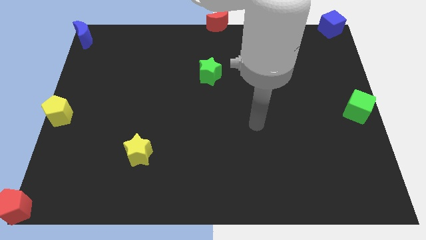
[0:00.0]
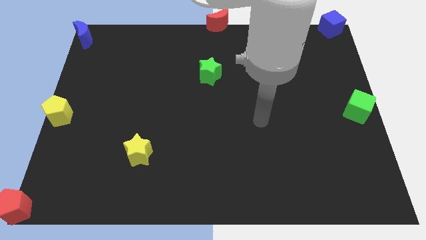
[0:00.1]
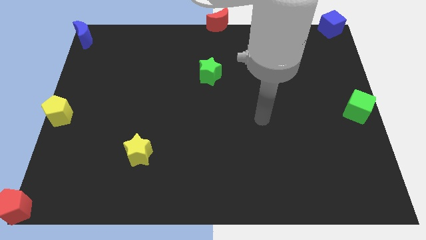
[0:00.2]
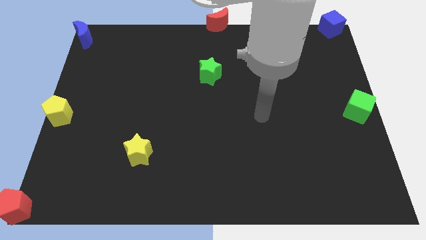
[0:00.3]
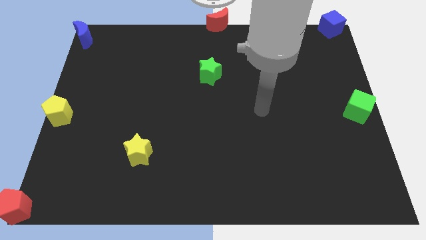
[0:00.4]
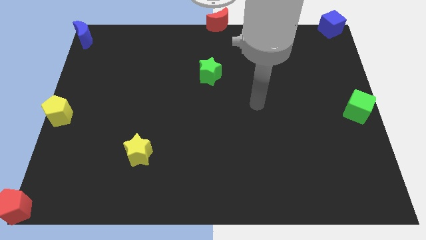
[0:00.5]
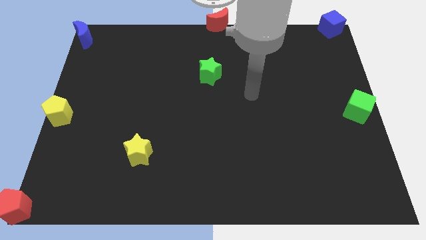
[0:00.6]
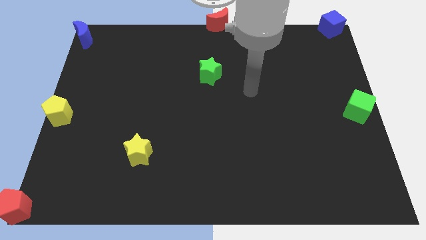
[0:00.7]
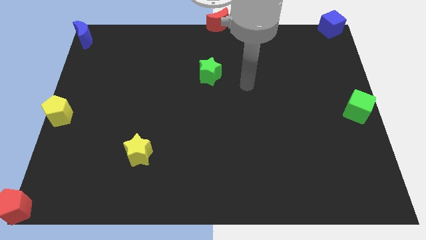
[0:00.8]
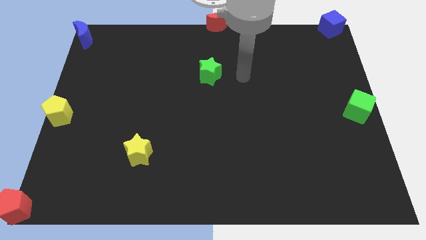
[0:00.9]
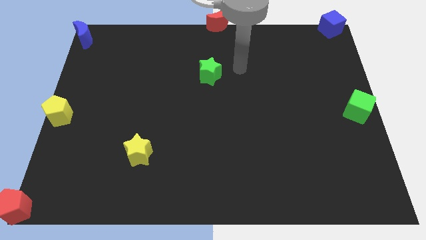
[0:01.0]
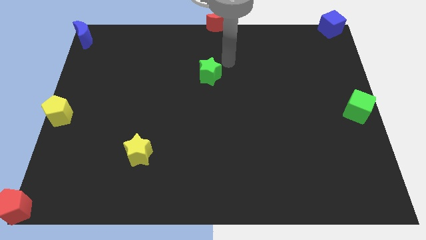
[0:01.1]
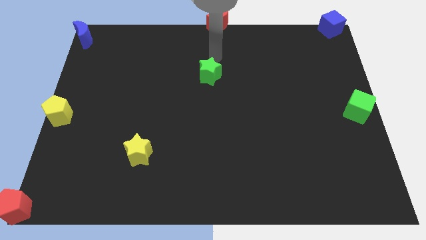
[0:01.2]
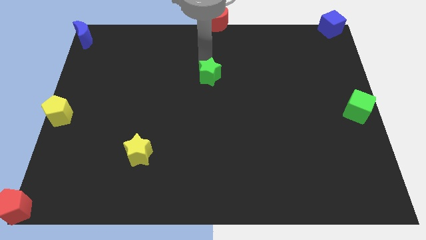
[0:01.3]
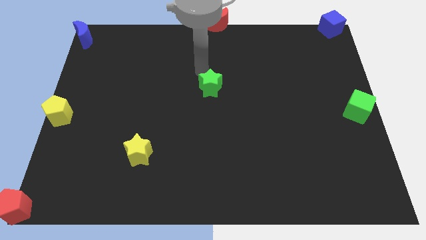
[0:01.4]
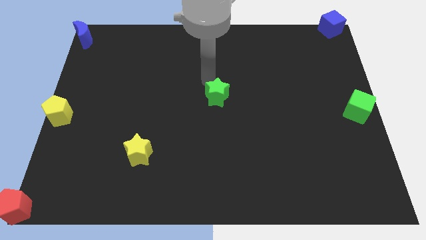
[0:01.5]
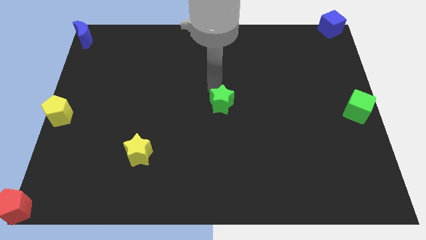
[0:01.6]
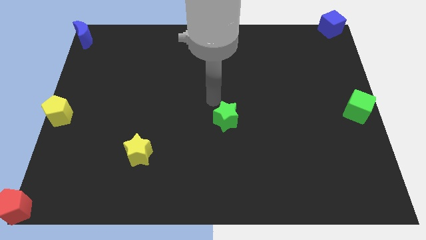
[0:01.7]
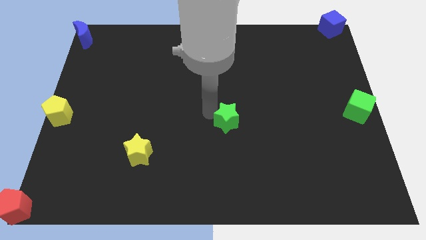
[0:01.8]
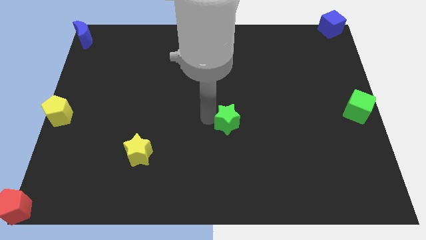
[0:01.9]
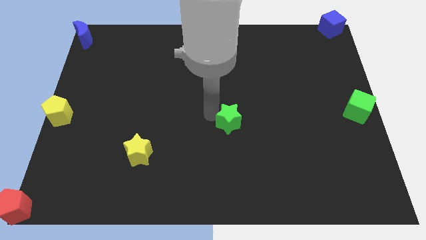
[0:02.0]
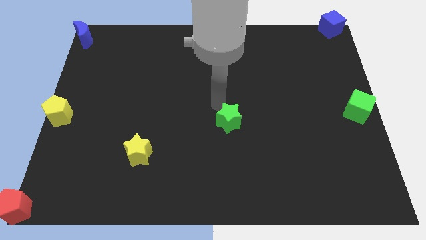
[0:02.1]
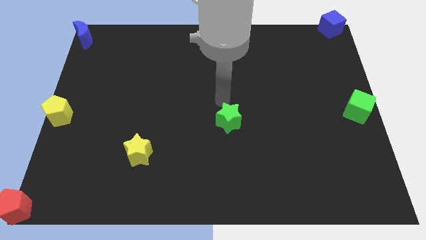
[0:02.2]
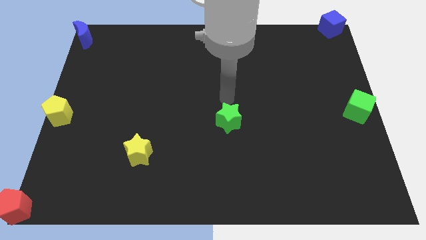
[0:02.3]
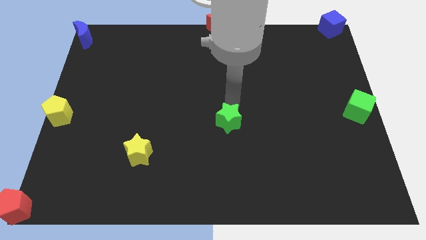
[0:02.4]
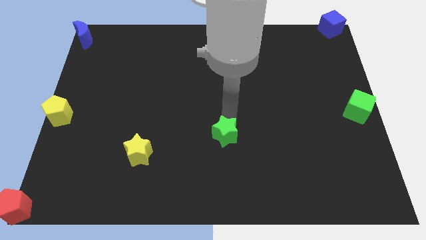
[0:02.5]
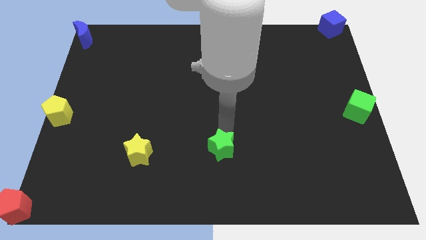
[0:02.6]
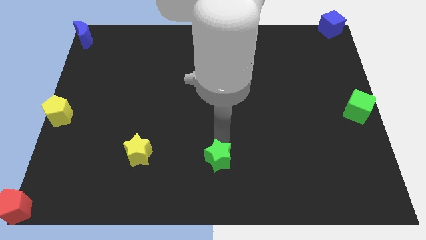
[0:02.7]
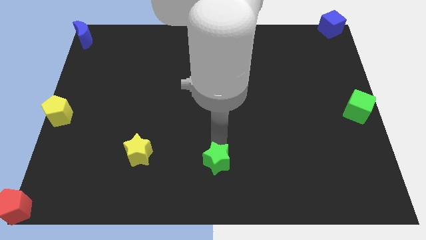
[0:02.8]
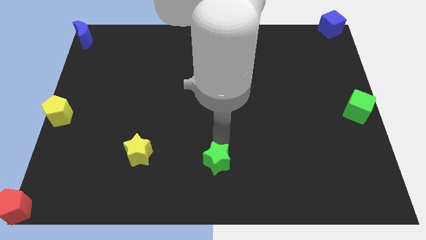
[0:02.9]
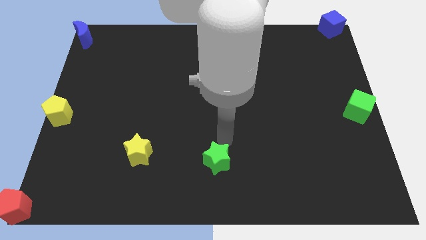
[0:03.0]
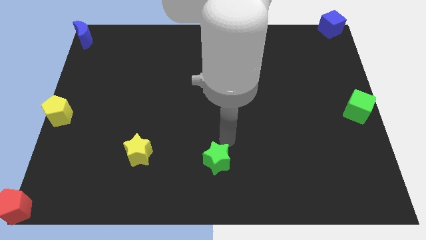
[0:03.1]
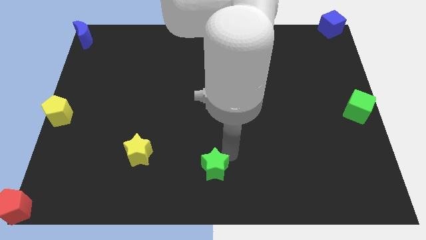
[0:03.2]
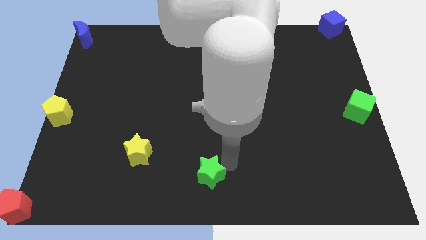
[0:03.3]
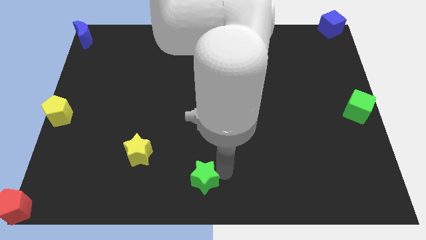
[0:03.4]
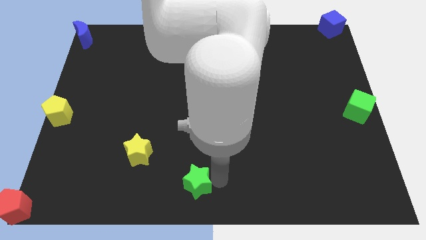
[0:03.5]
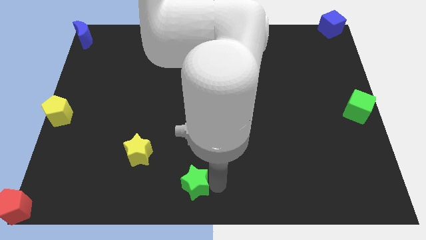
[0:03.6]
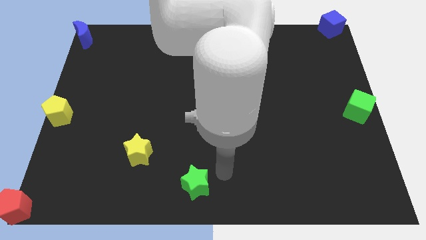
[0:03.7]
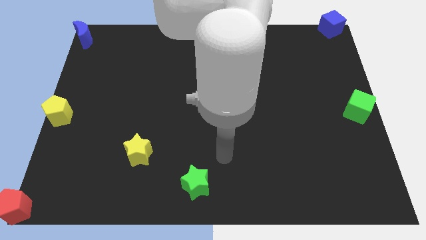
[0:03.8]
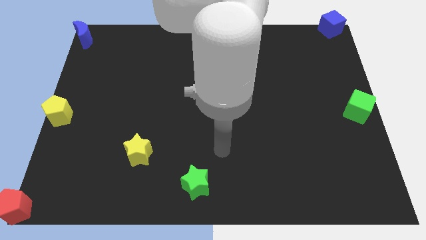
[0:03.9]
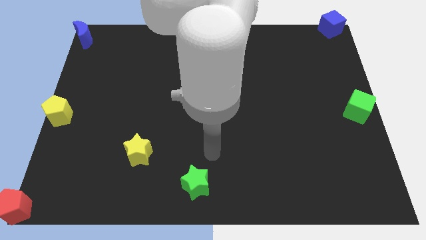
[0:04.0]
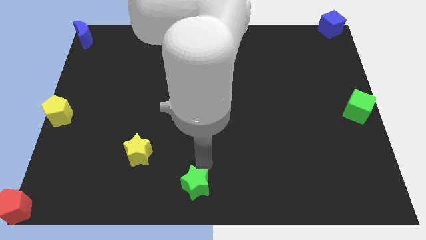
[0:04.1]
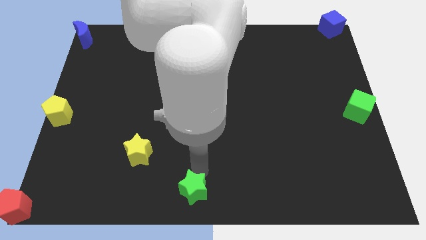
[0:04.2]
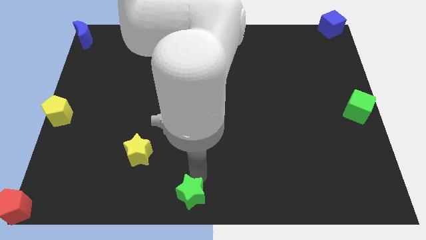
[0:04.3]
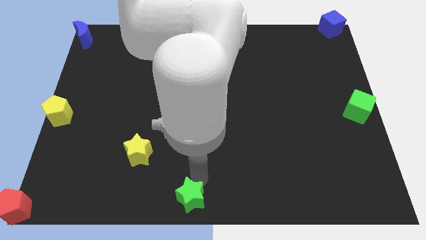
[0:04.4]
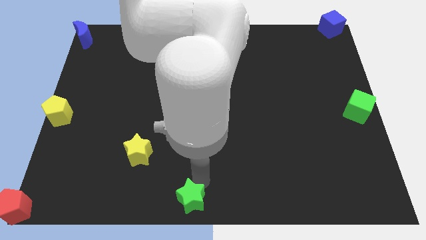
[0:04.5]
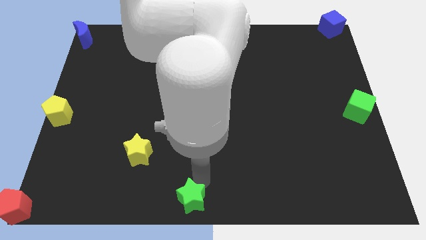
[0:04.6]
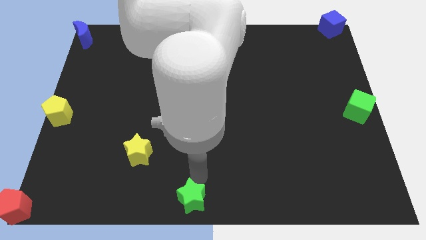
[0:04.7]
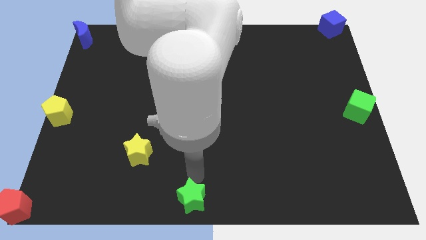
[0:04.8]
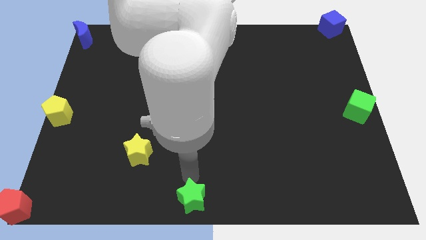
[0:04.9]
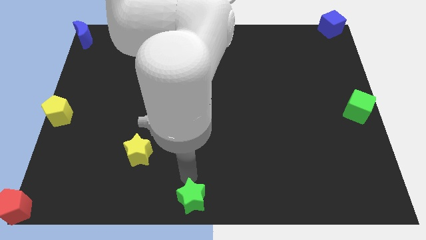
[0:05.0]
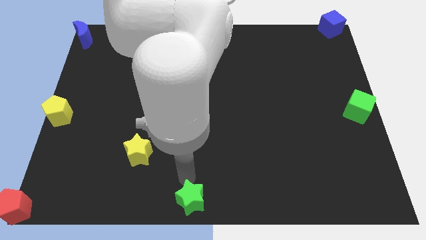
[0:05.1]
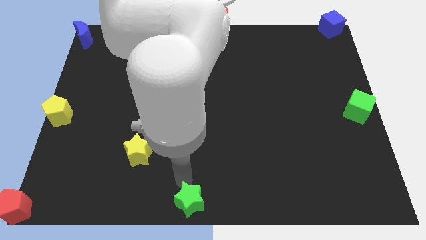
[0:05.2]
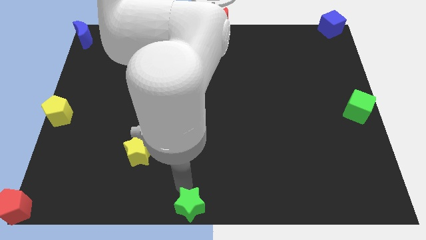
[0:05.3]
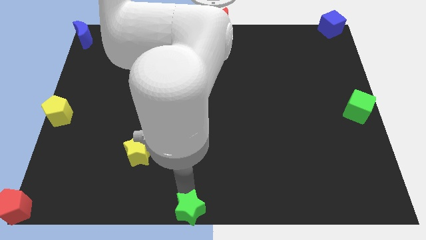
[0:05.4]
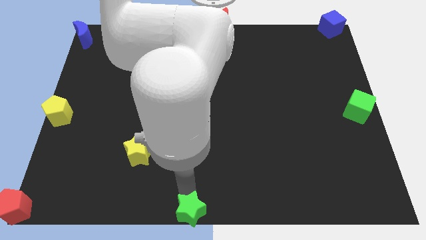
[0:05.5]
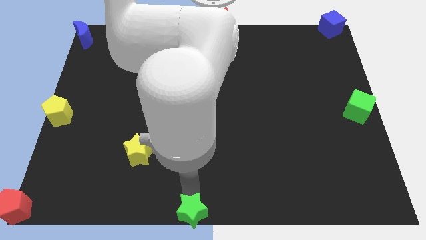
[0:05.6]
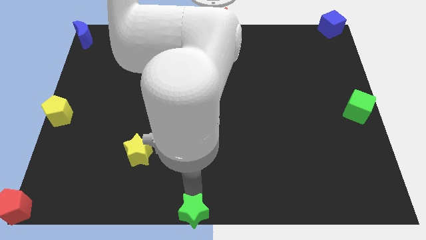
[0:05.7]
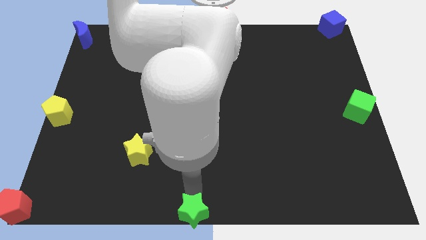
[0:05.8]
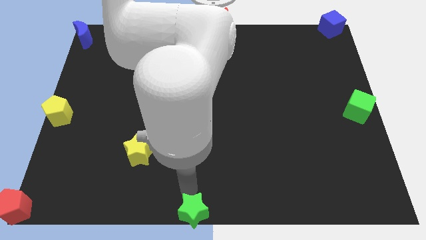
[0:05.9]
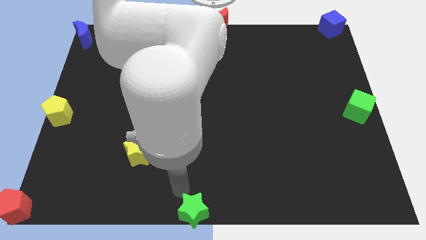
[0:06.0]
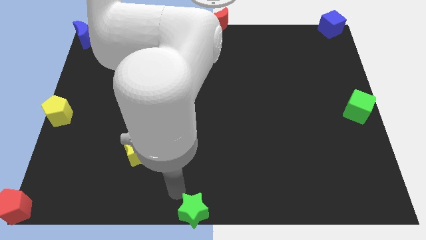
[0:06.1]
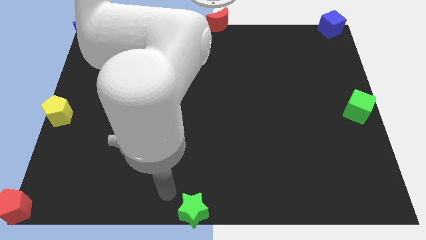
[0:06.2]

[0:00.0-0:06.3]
place the green star at the bottom center of the board

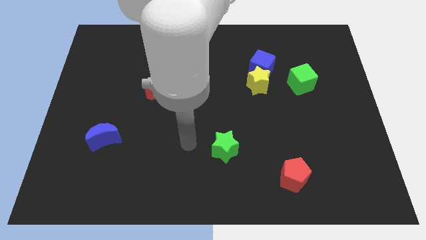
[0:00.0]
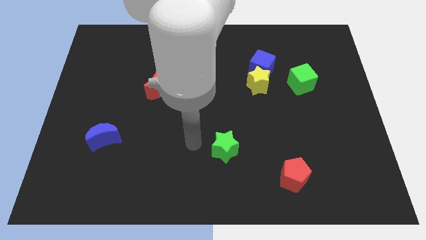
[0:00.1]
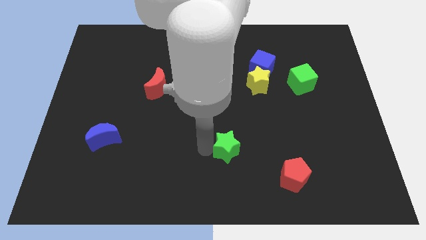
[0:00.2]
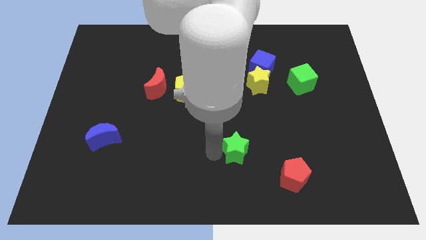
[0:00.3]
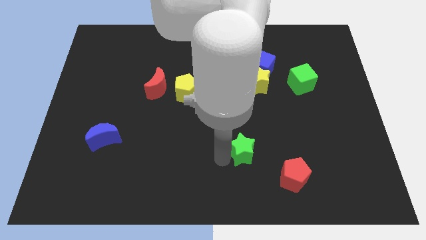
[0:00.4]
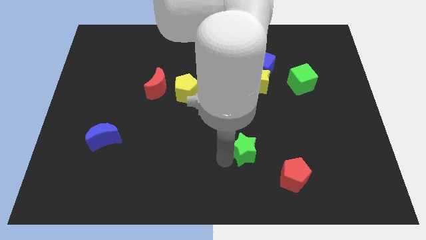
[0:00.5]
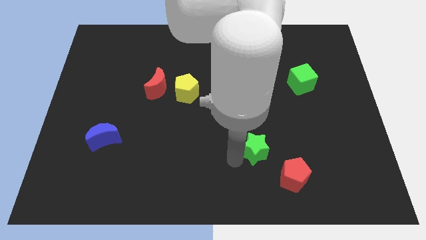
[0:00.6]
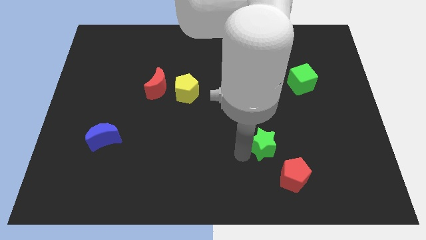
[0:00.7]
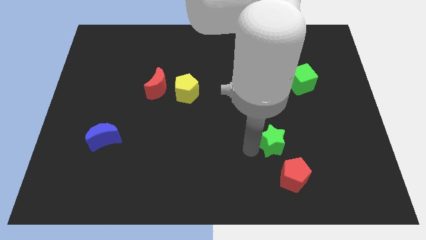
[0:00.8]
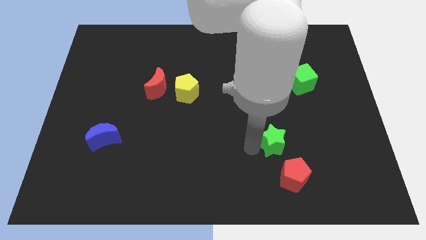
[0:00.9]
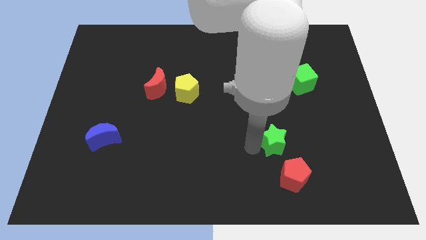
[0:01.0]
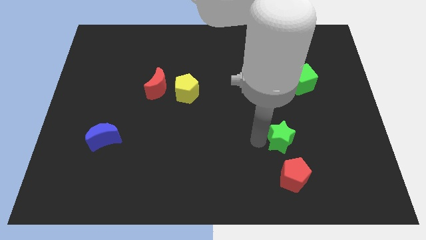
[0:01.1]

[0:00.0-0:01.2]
push green star to the right

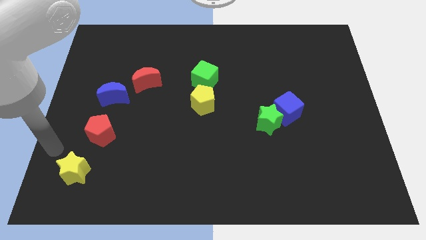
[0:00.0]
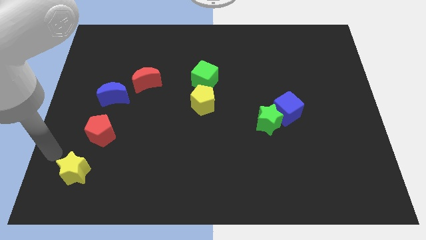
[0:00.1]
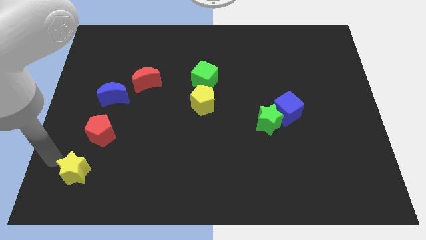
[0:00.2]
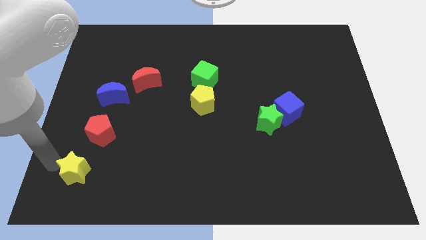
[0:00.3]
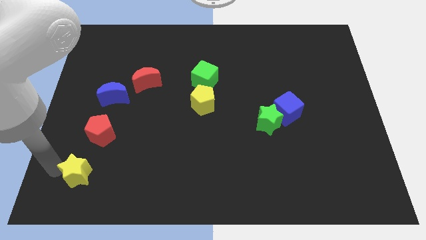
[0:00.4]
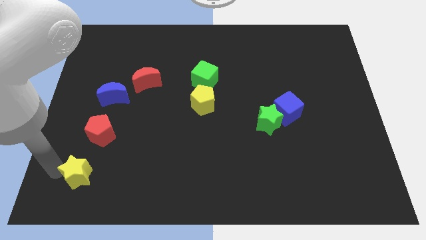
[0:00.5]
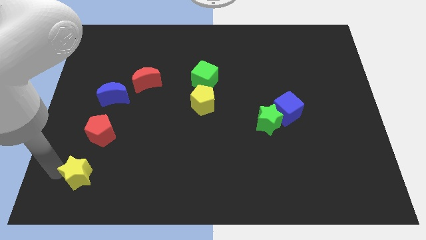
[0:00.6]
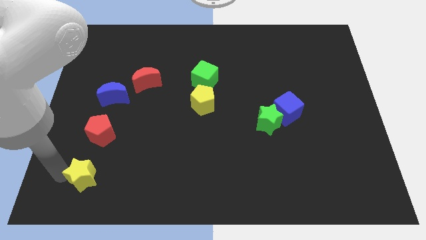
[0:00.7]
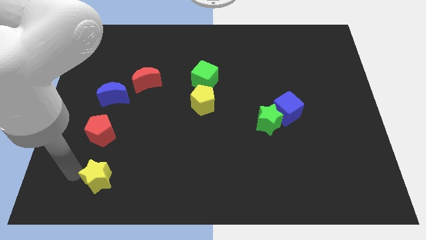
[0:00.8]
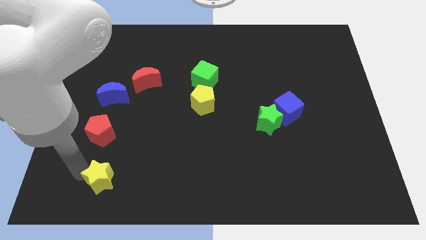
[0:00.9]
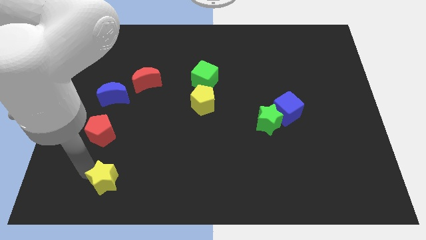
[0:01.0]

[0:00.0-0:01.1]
slide the yellow star slightly to the right

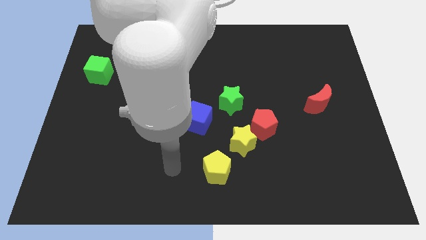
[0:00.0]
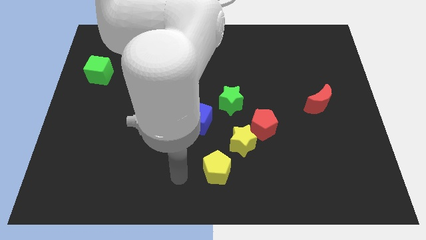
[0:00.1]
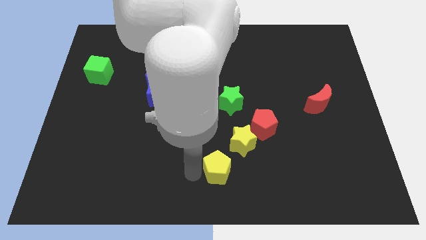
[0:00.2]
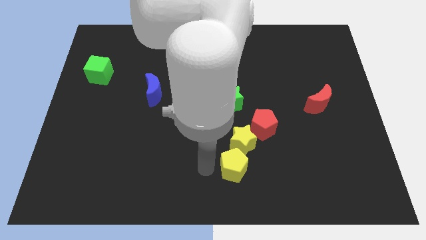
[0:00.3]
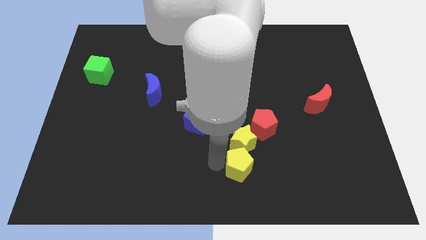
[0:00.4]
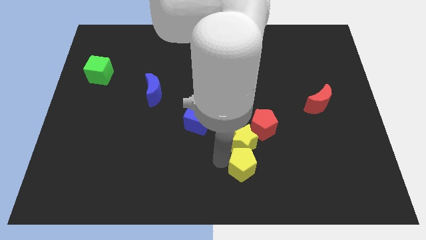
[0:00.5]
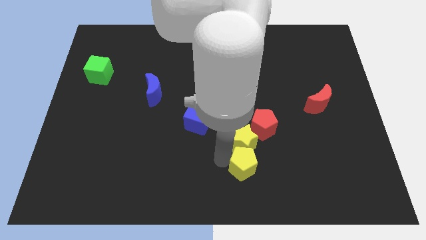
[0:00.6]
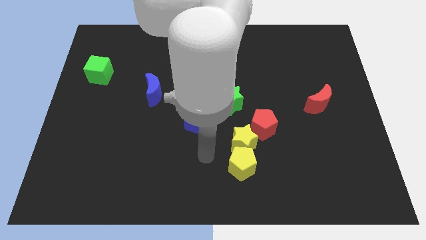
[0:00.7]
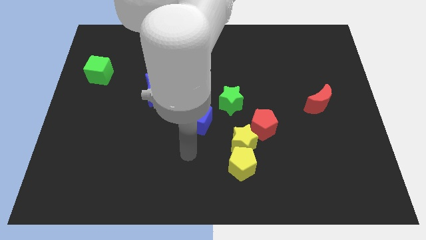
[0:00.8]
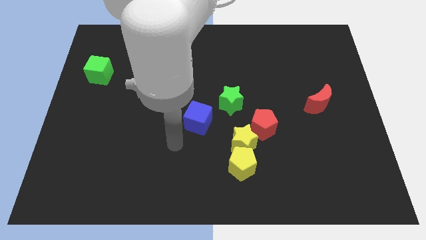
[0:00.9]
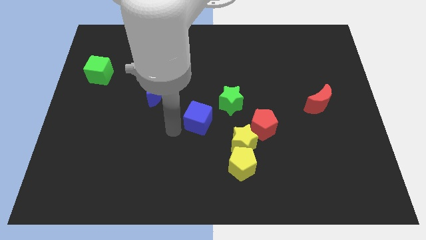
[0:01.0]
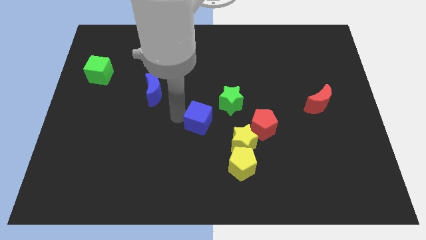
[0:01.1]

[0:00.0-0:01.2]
place the yellow pentagon below the yellow star
